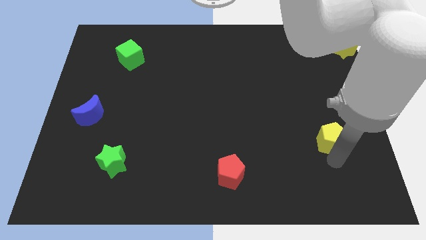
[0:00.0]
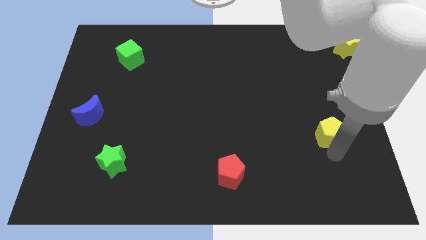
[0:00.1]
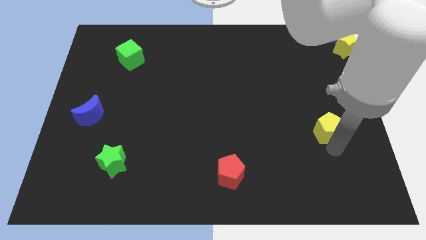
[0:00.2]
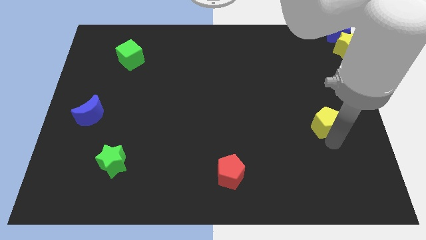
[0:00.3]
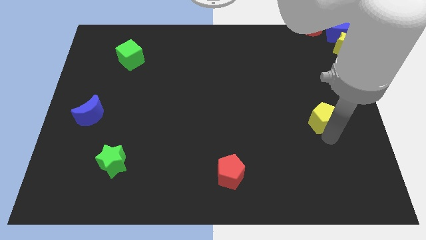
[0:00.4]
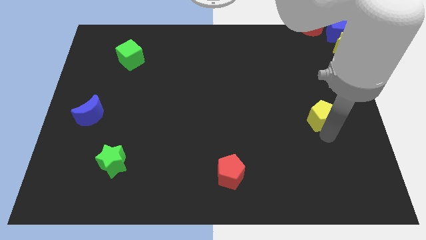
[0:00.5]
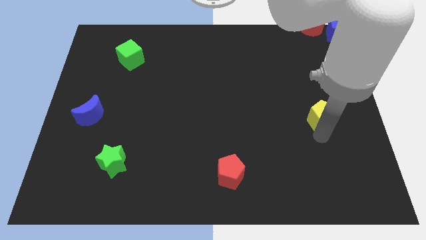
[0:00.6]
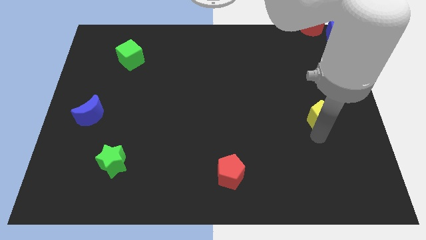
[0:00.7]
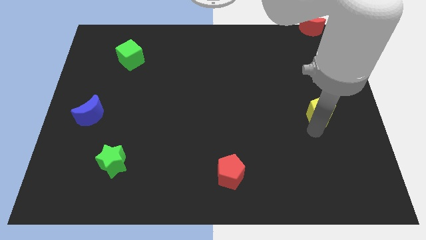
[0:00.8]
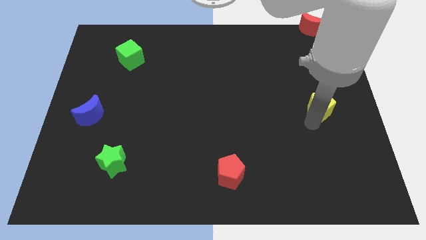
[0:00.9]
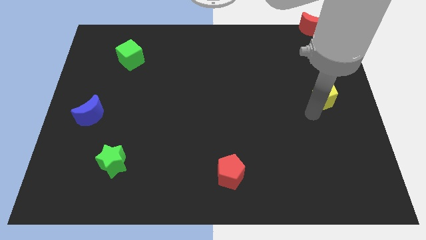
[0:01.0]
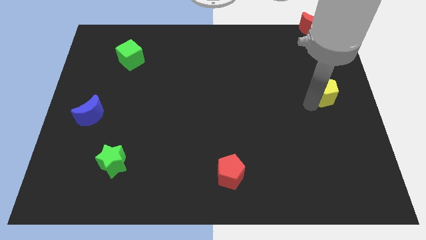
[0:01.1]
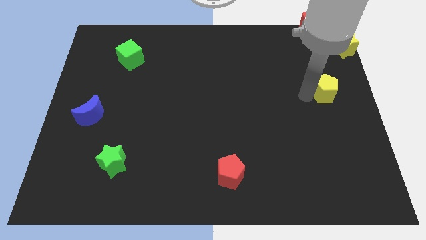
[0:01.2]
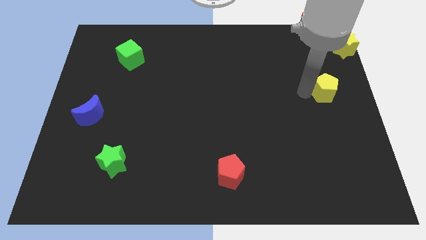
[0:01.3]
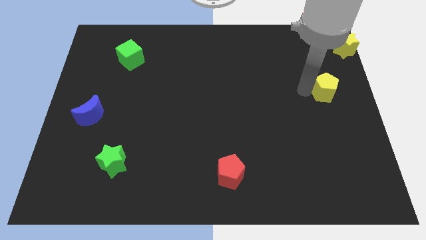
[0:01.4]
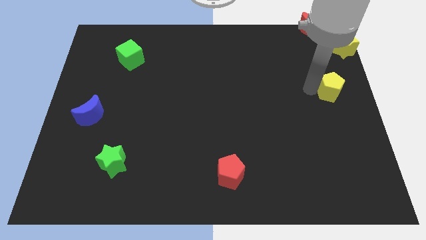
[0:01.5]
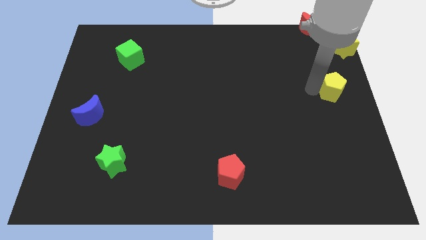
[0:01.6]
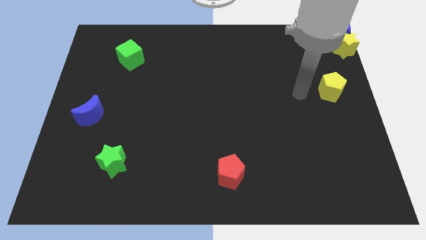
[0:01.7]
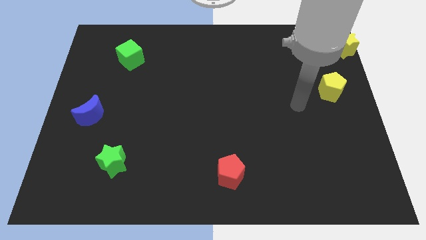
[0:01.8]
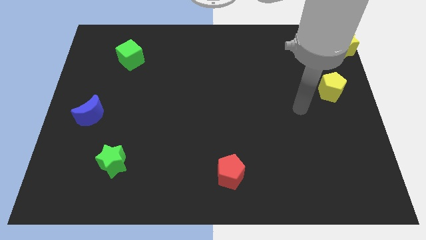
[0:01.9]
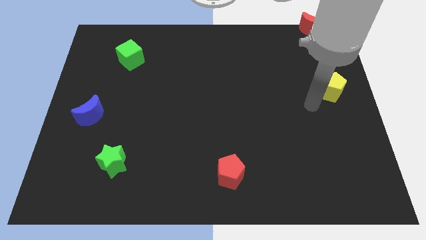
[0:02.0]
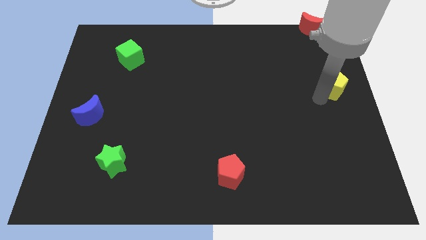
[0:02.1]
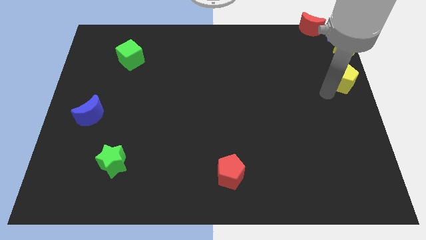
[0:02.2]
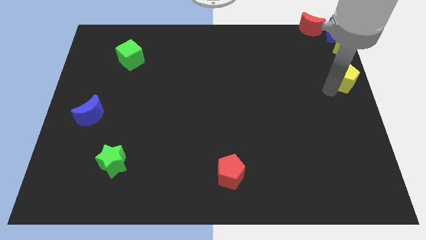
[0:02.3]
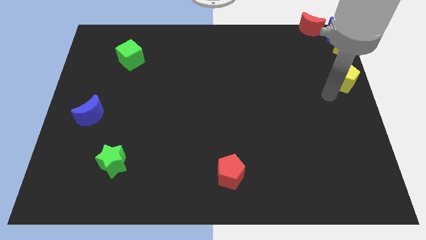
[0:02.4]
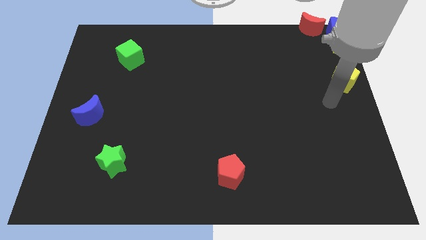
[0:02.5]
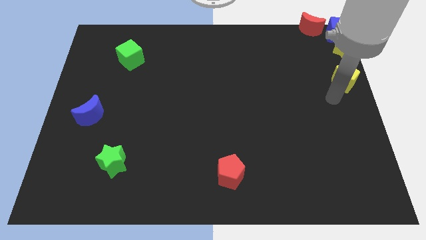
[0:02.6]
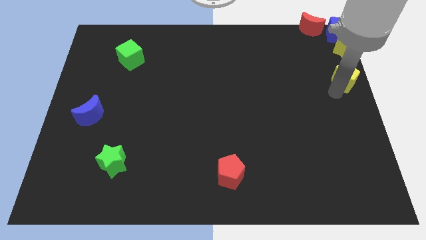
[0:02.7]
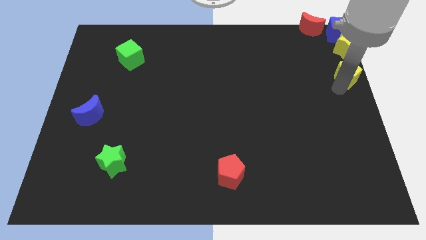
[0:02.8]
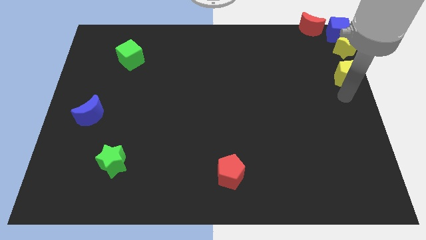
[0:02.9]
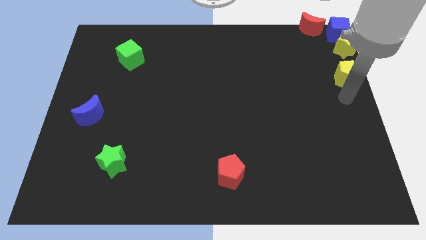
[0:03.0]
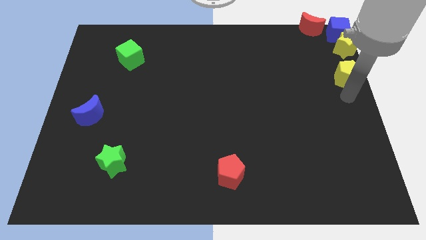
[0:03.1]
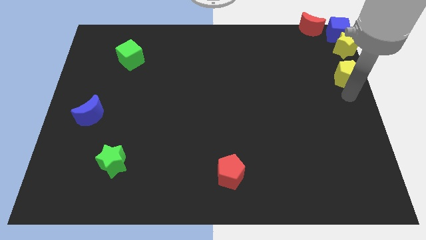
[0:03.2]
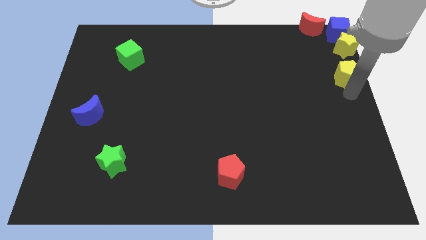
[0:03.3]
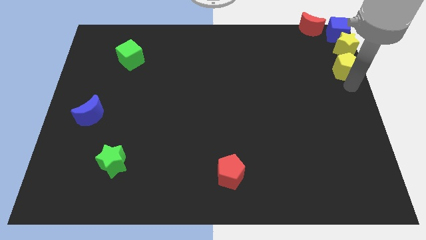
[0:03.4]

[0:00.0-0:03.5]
place the yellow pentagon at the bottom of the yellow star

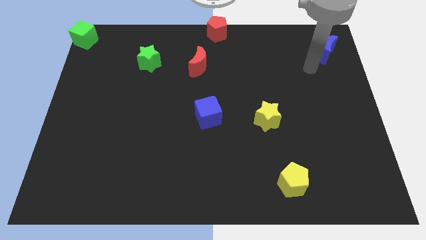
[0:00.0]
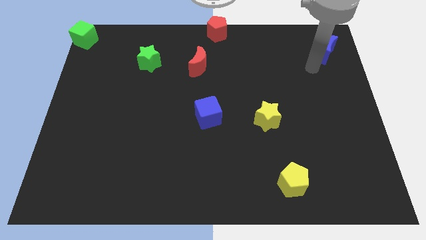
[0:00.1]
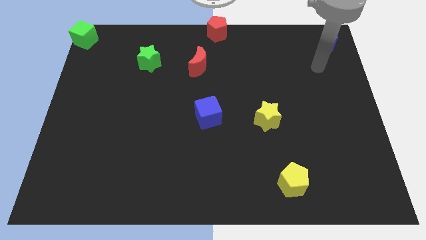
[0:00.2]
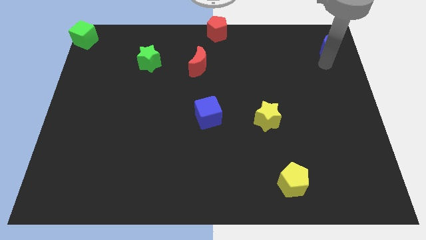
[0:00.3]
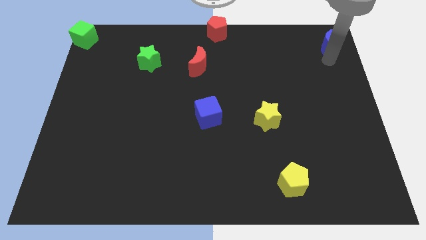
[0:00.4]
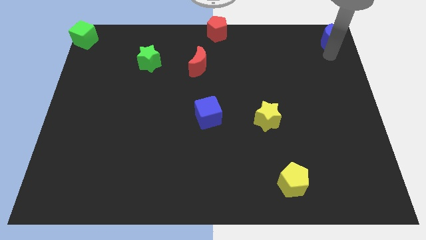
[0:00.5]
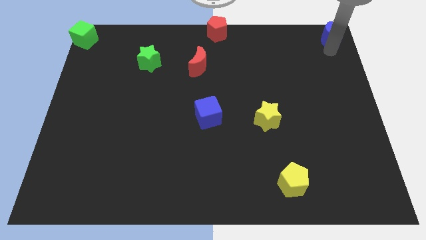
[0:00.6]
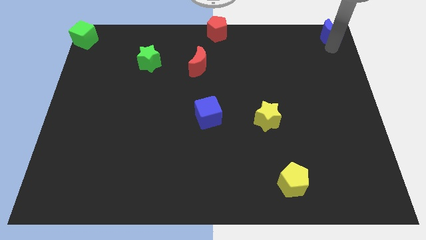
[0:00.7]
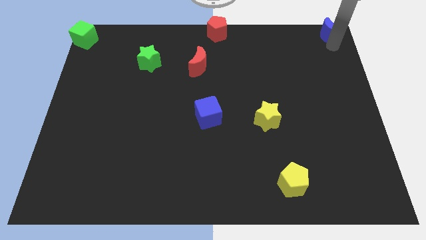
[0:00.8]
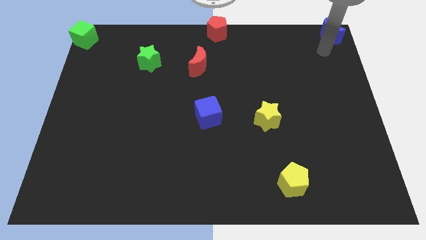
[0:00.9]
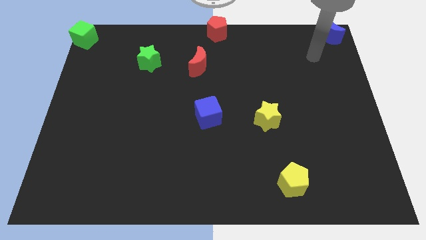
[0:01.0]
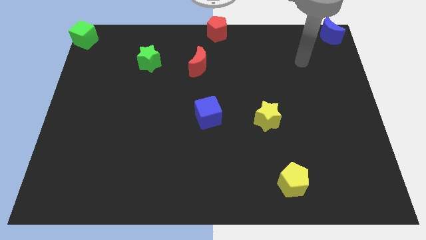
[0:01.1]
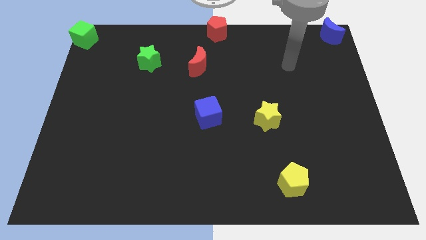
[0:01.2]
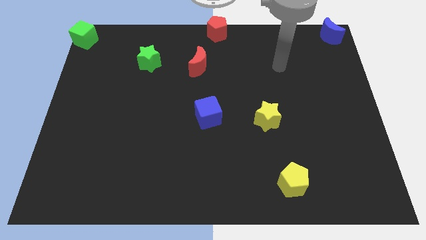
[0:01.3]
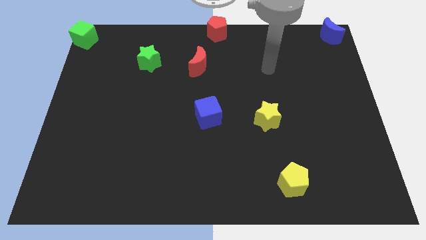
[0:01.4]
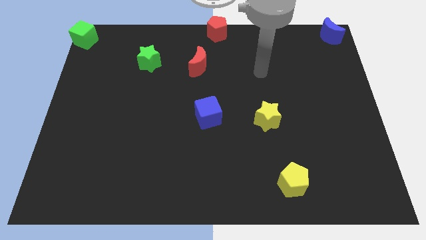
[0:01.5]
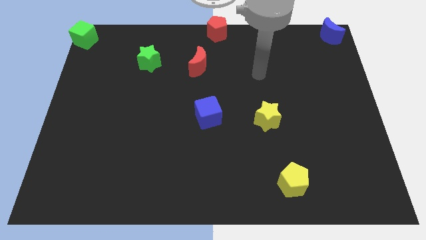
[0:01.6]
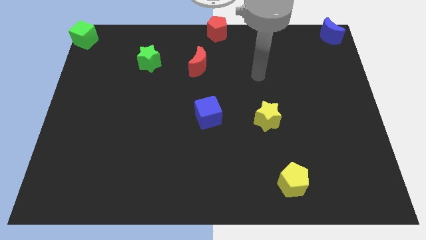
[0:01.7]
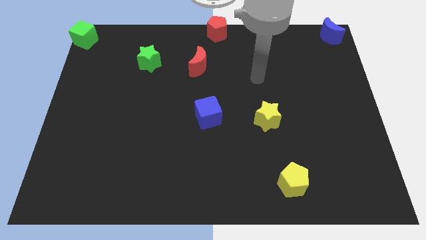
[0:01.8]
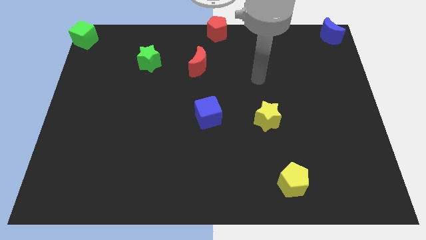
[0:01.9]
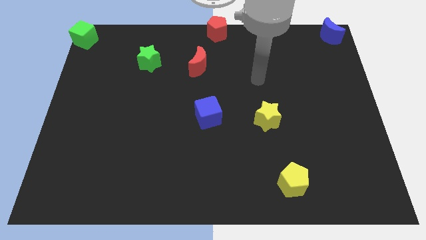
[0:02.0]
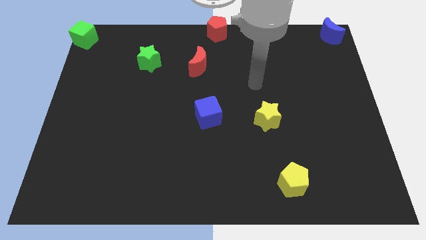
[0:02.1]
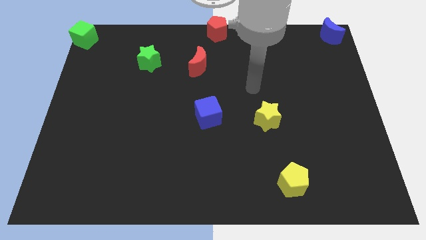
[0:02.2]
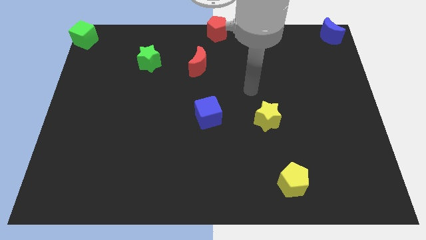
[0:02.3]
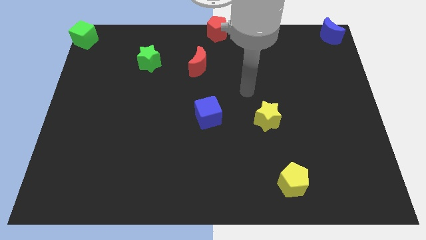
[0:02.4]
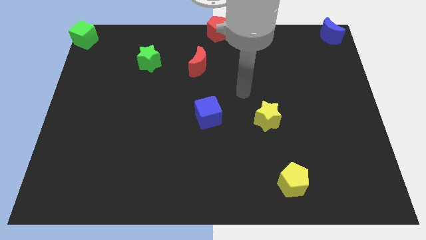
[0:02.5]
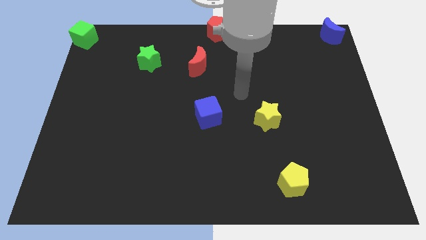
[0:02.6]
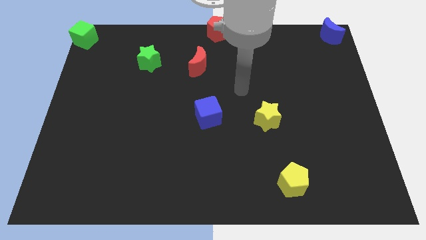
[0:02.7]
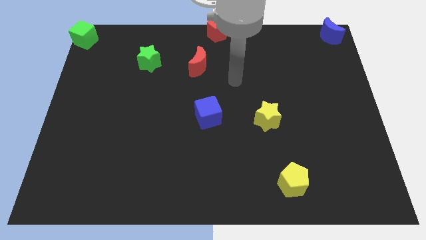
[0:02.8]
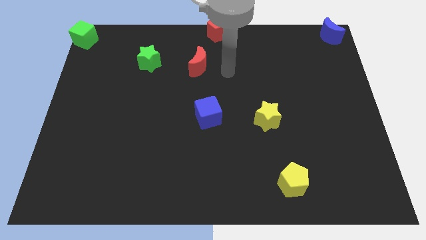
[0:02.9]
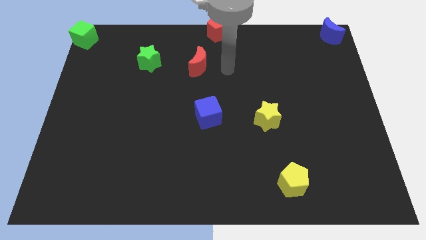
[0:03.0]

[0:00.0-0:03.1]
push the blue moon to the top right

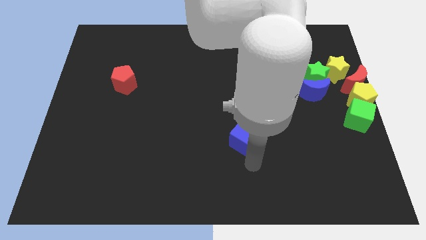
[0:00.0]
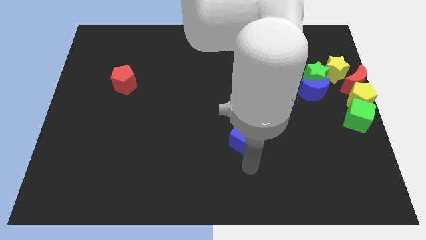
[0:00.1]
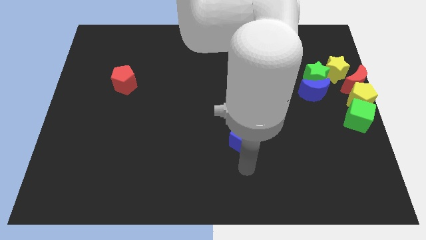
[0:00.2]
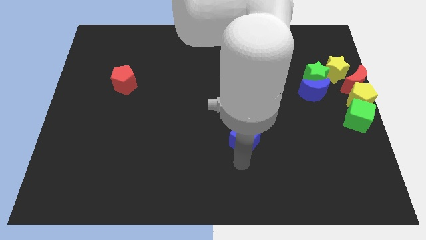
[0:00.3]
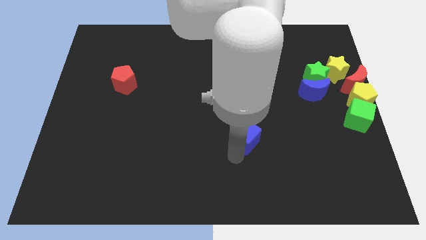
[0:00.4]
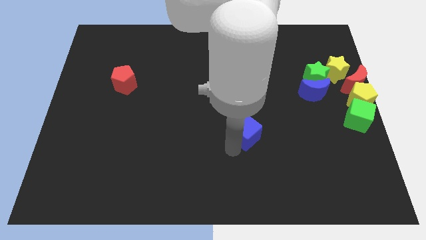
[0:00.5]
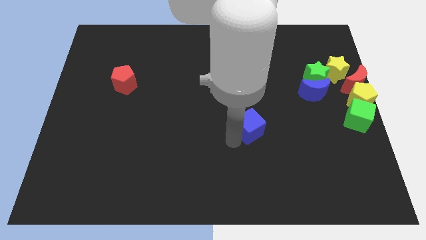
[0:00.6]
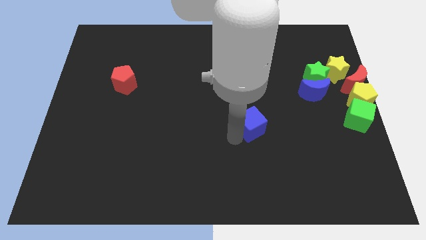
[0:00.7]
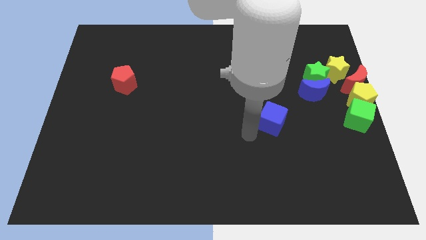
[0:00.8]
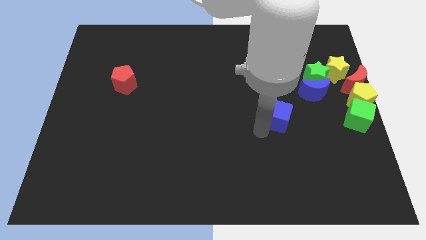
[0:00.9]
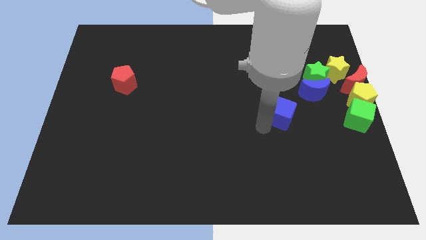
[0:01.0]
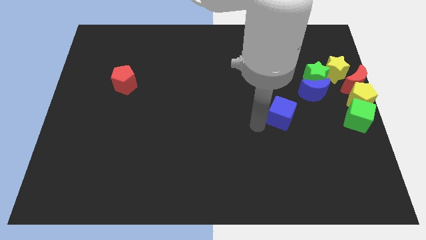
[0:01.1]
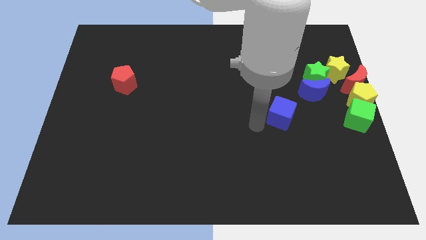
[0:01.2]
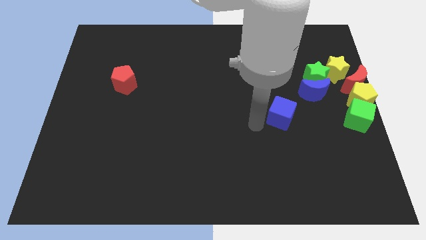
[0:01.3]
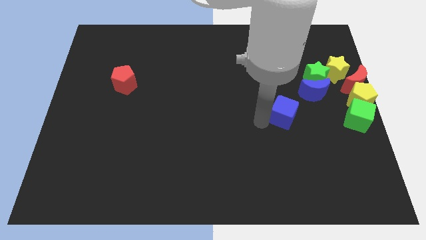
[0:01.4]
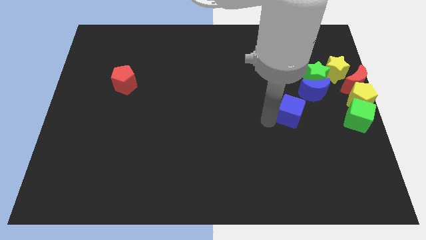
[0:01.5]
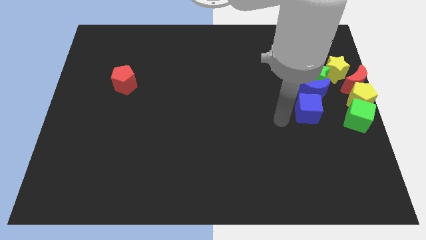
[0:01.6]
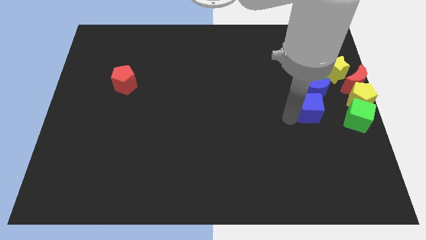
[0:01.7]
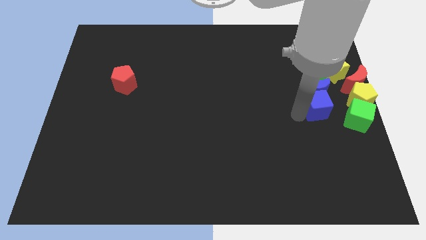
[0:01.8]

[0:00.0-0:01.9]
move the blue cube to the bottom side of the blue moon

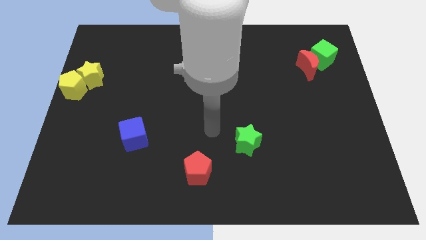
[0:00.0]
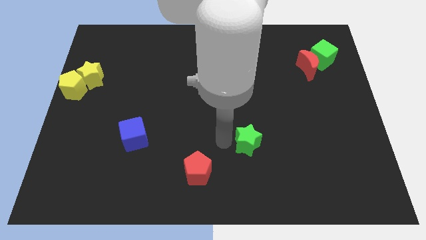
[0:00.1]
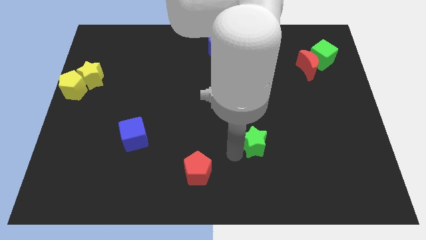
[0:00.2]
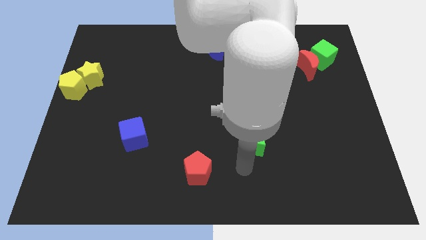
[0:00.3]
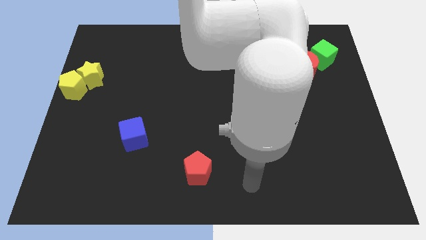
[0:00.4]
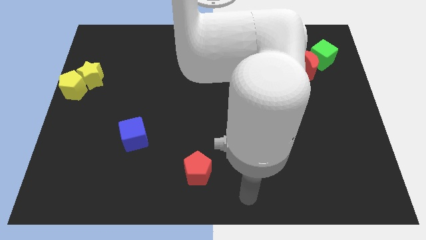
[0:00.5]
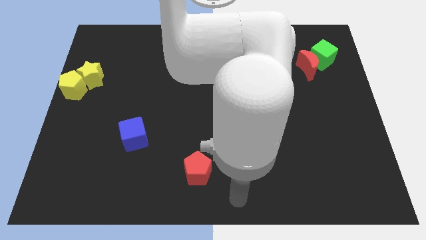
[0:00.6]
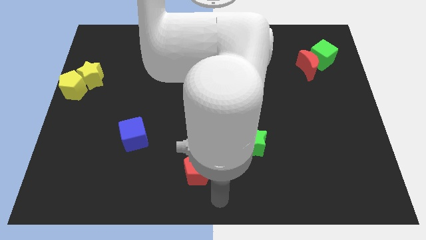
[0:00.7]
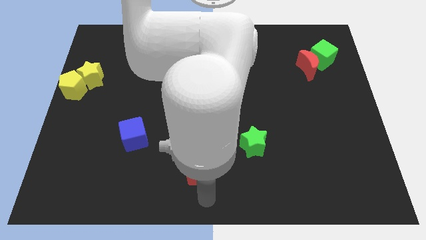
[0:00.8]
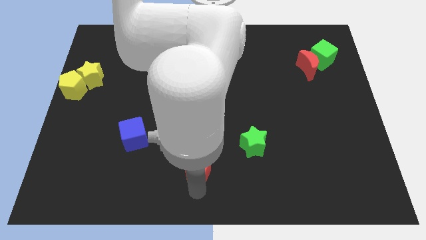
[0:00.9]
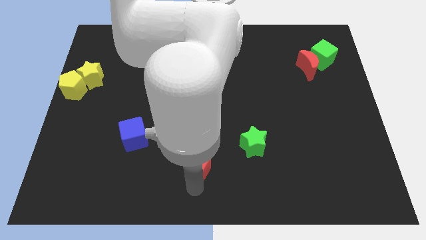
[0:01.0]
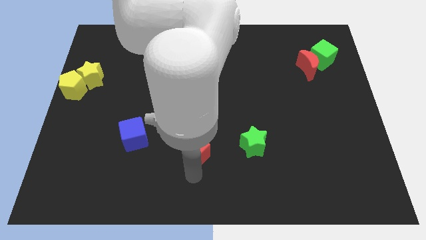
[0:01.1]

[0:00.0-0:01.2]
touch the bottom of red pentagon
